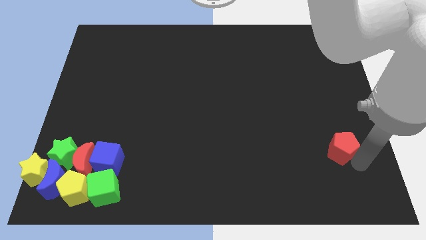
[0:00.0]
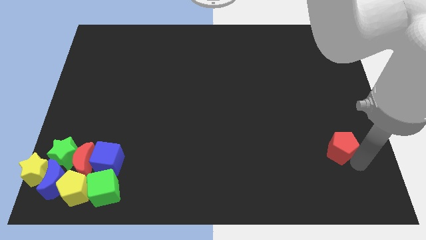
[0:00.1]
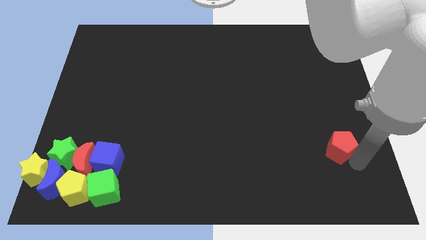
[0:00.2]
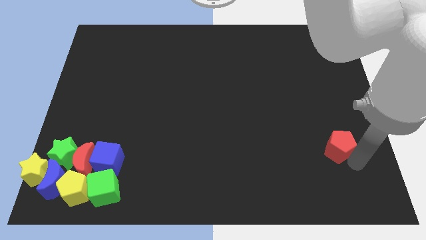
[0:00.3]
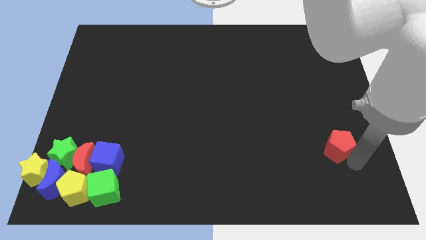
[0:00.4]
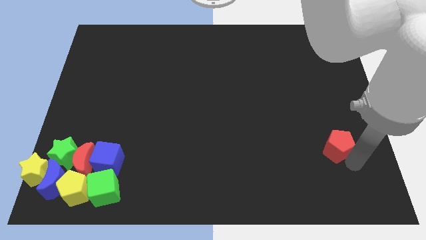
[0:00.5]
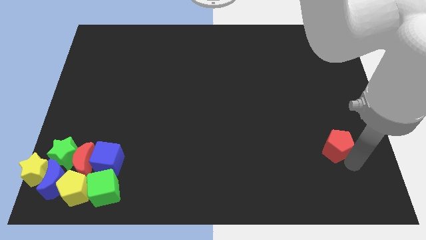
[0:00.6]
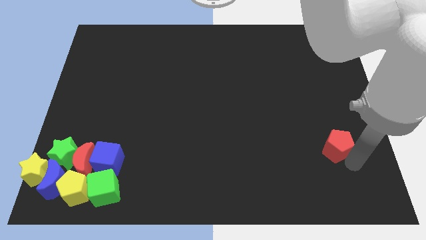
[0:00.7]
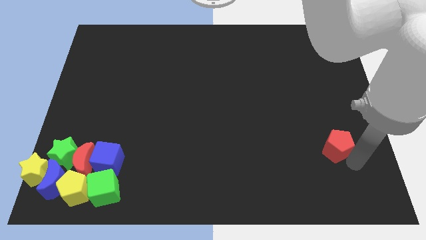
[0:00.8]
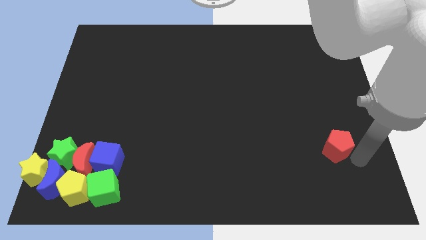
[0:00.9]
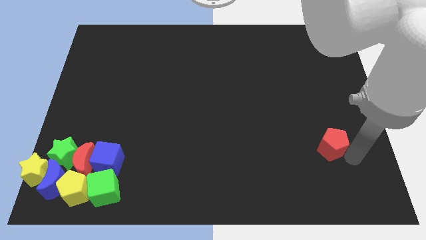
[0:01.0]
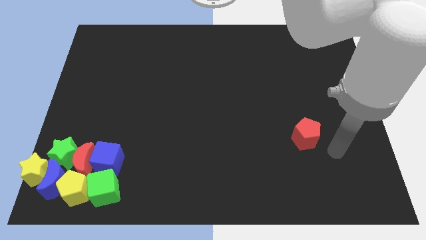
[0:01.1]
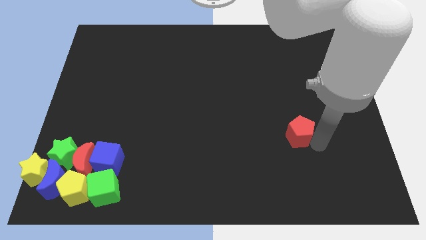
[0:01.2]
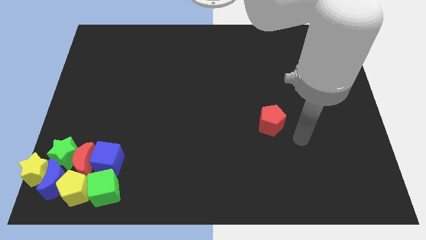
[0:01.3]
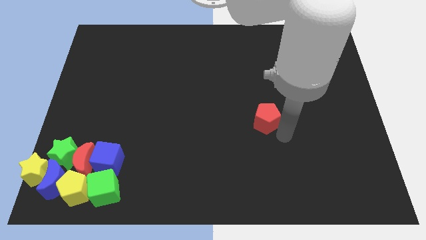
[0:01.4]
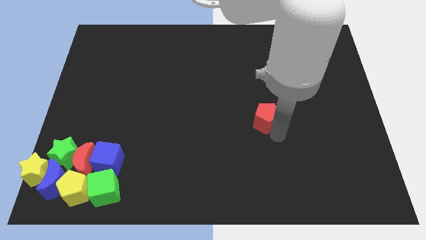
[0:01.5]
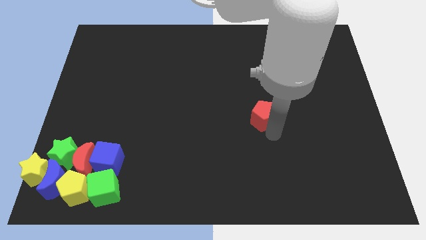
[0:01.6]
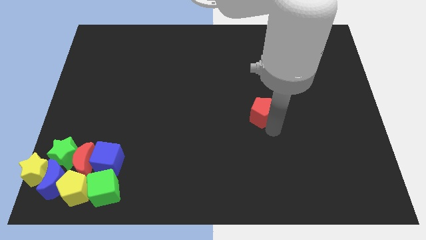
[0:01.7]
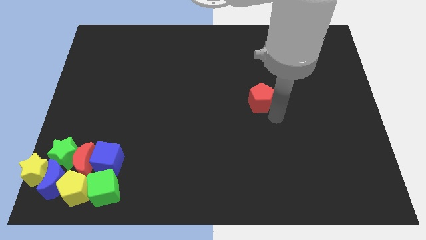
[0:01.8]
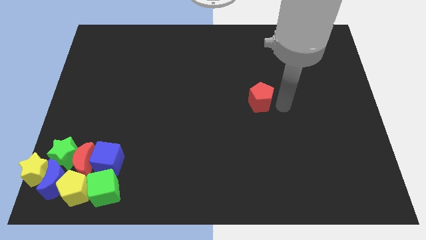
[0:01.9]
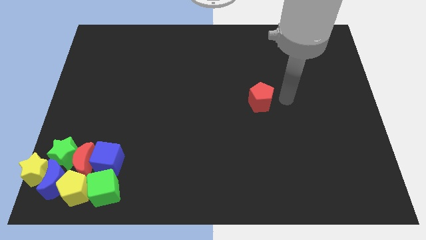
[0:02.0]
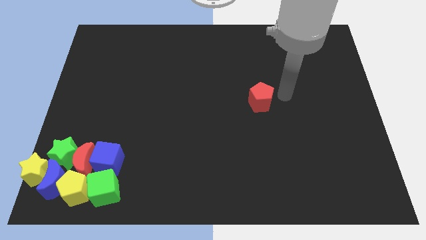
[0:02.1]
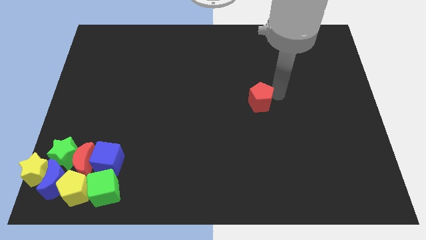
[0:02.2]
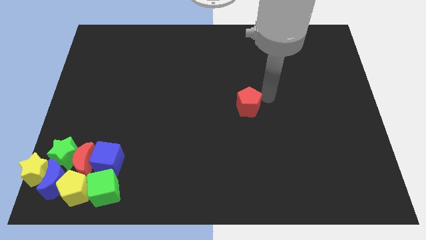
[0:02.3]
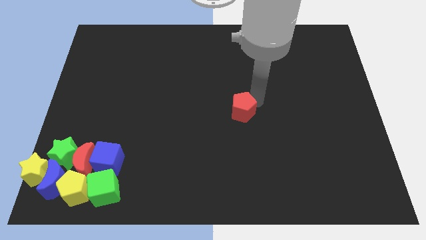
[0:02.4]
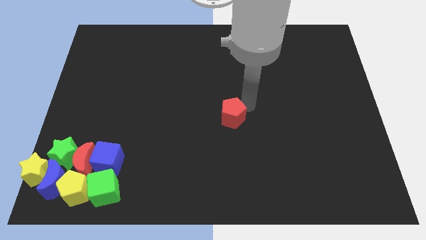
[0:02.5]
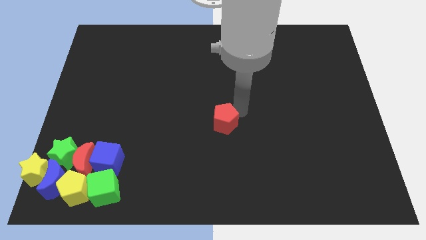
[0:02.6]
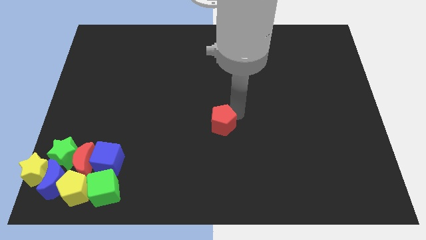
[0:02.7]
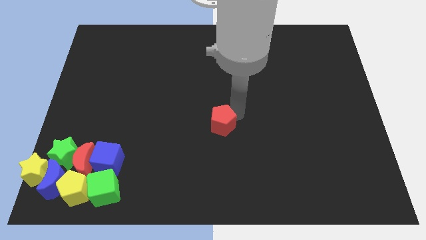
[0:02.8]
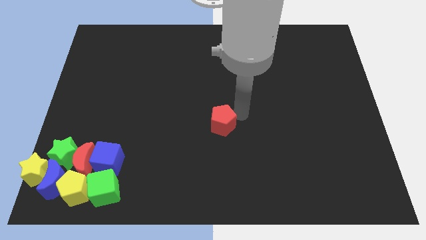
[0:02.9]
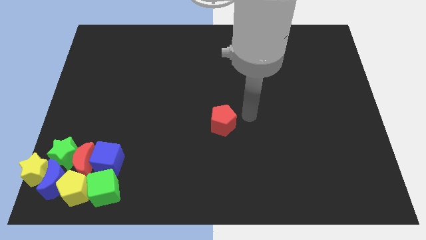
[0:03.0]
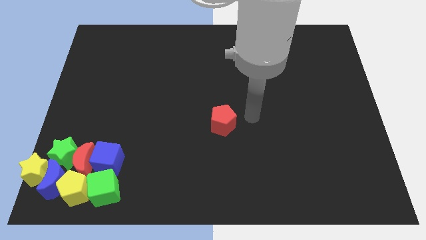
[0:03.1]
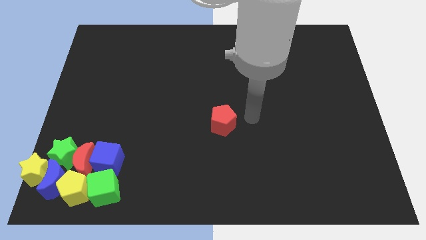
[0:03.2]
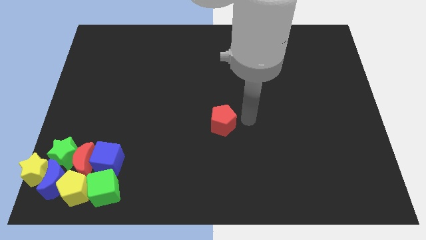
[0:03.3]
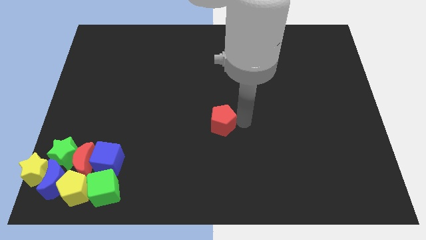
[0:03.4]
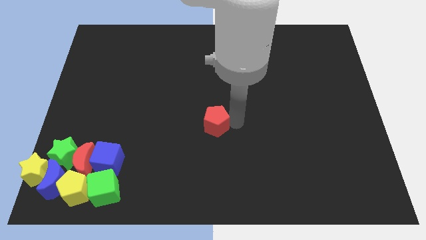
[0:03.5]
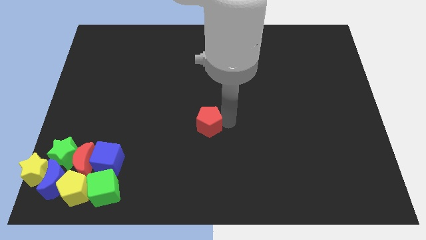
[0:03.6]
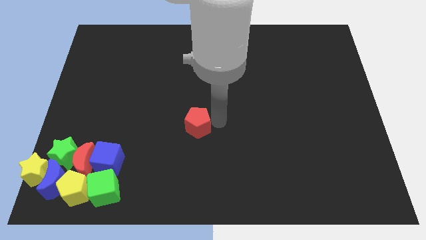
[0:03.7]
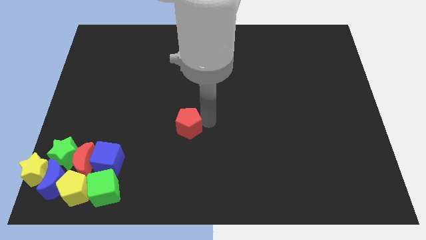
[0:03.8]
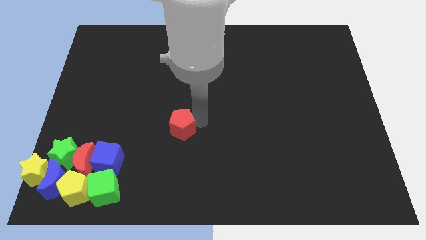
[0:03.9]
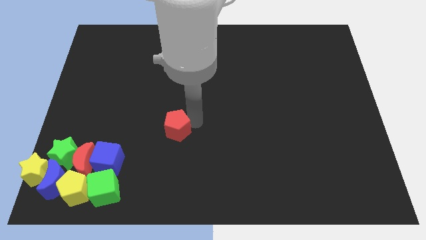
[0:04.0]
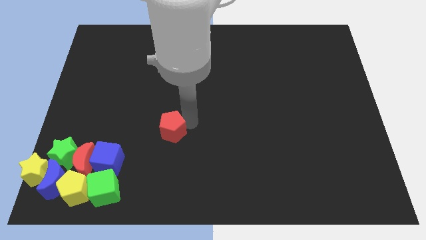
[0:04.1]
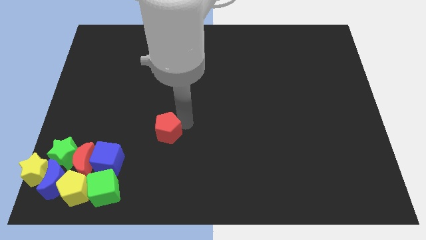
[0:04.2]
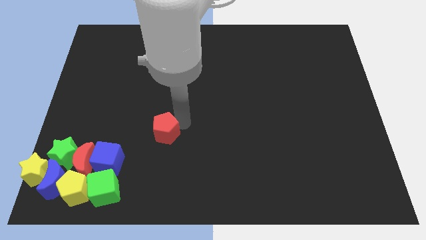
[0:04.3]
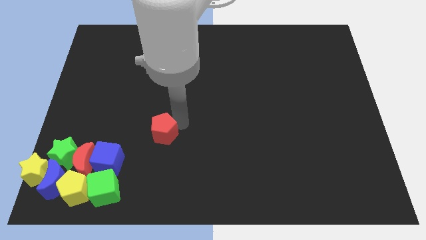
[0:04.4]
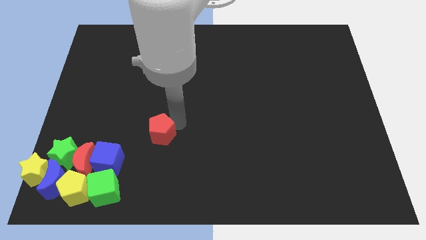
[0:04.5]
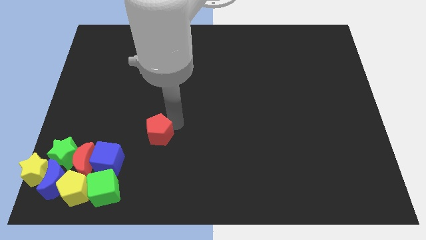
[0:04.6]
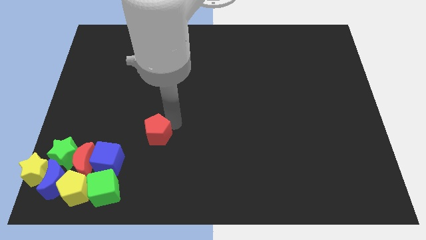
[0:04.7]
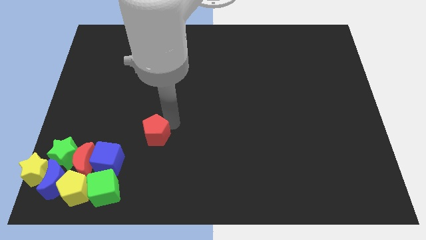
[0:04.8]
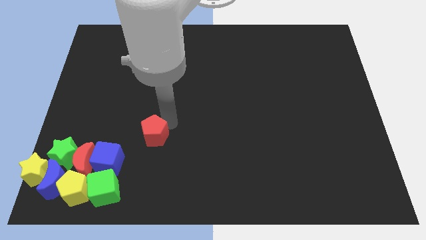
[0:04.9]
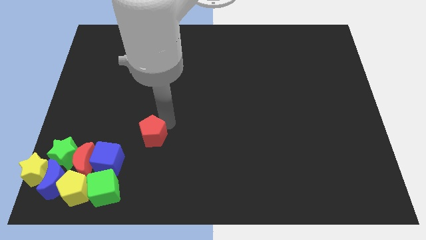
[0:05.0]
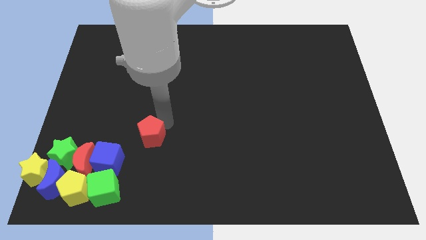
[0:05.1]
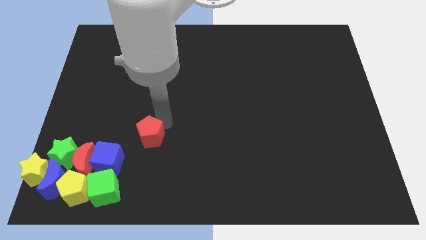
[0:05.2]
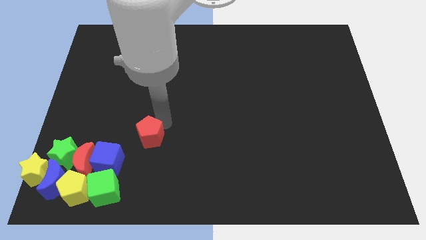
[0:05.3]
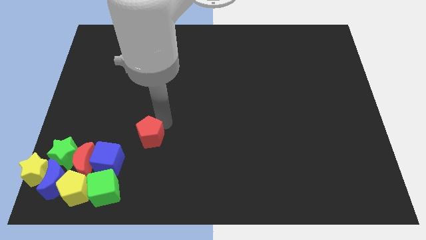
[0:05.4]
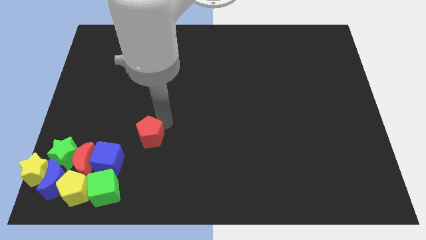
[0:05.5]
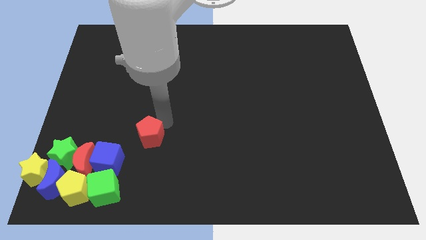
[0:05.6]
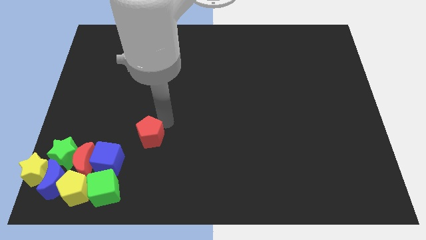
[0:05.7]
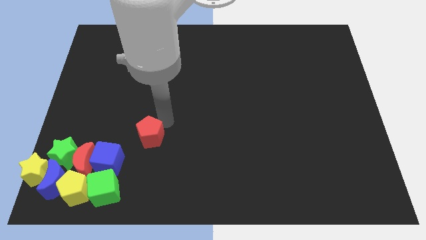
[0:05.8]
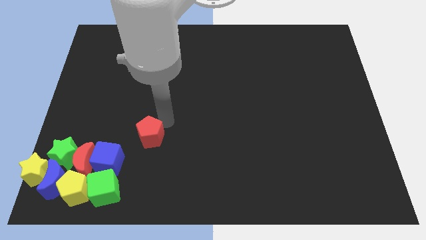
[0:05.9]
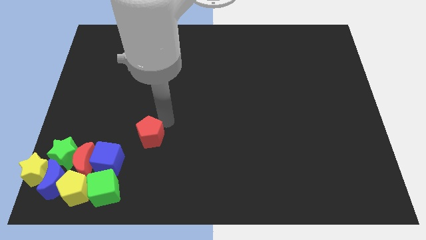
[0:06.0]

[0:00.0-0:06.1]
move the red pentagon towards the green star

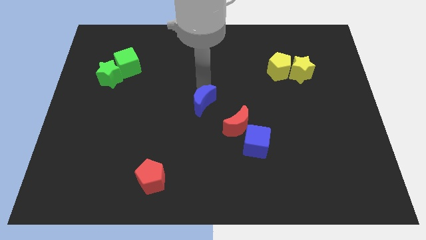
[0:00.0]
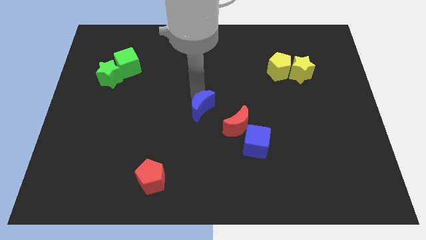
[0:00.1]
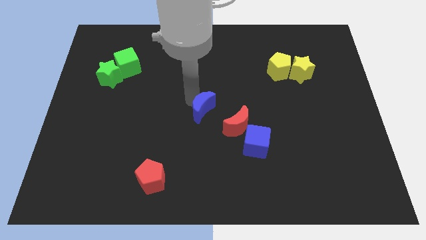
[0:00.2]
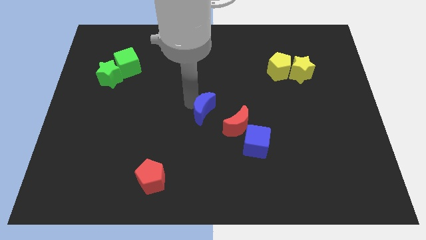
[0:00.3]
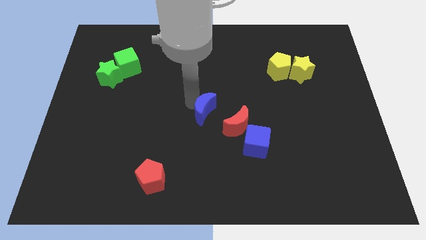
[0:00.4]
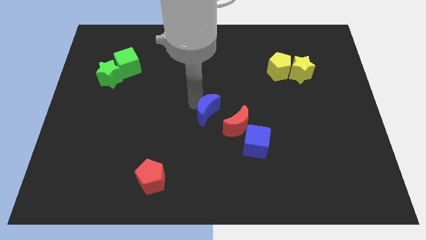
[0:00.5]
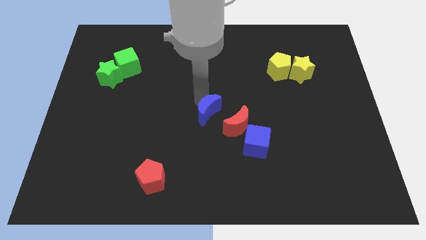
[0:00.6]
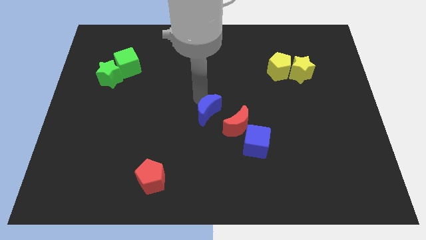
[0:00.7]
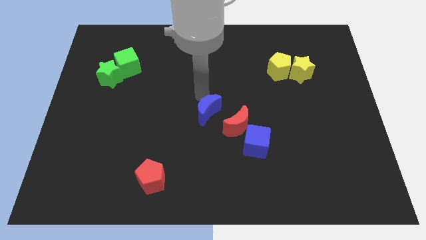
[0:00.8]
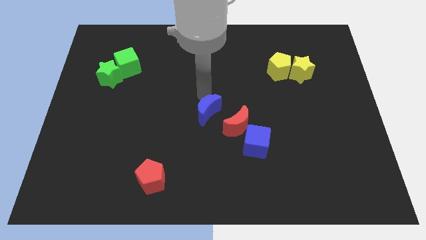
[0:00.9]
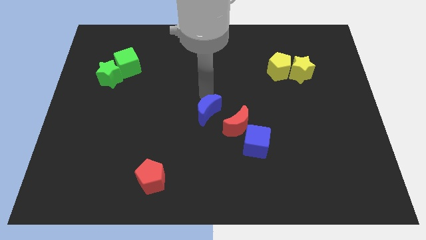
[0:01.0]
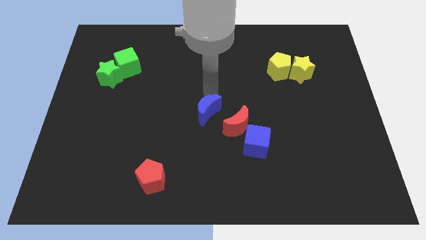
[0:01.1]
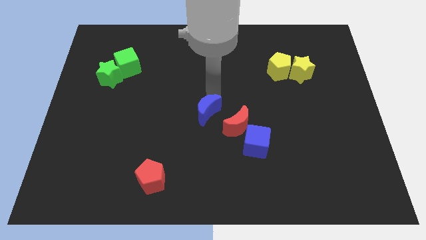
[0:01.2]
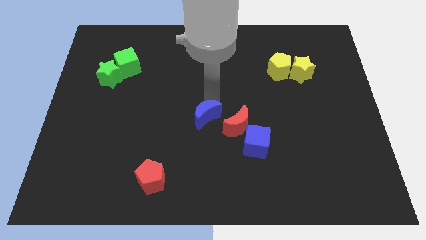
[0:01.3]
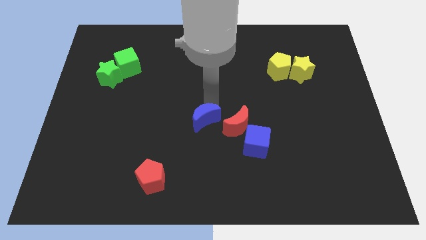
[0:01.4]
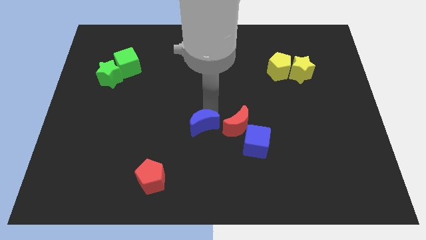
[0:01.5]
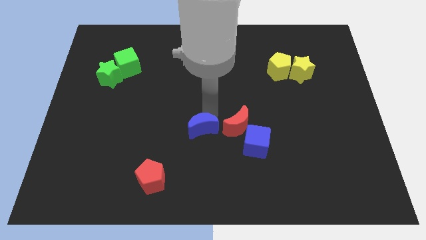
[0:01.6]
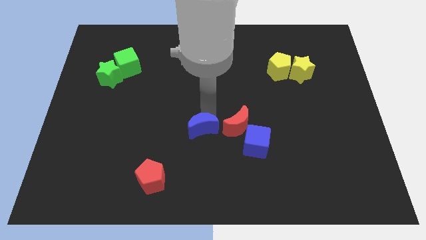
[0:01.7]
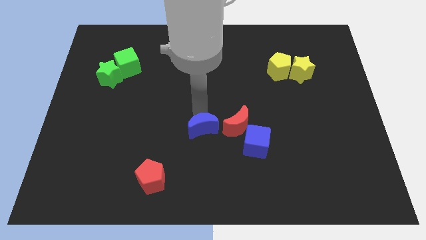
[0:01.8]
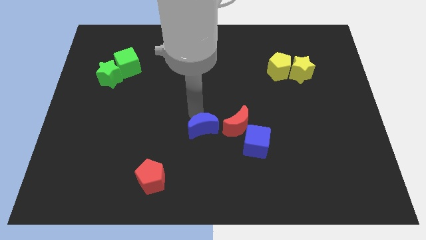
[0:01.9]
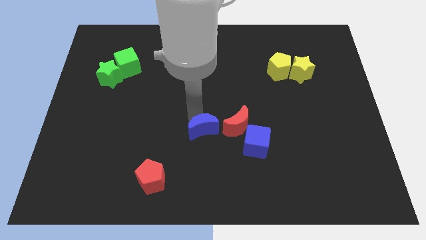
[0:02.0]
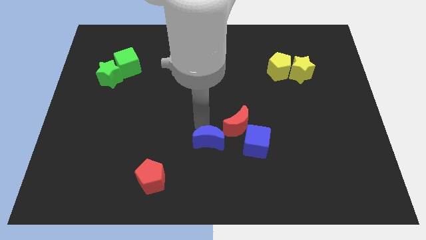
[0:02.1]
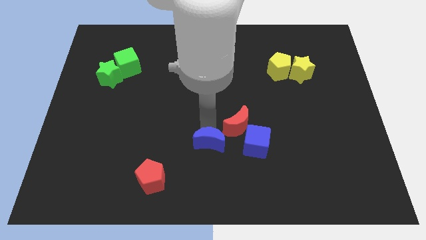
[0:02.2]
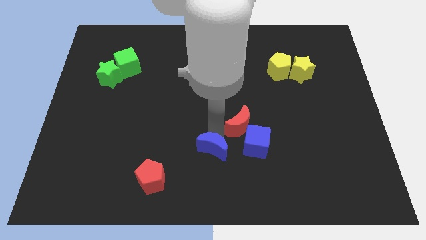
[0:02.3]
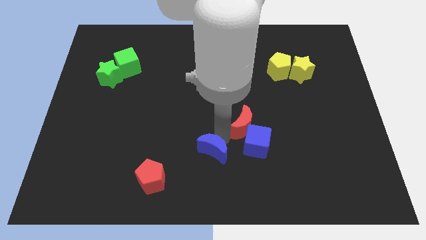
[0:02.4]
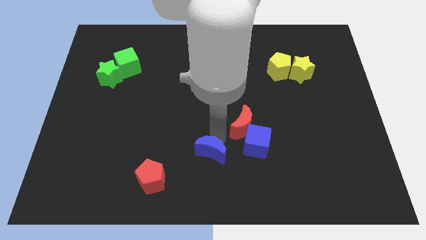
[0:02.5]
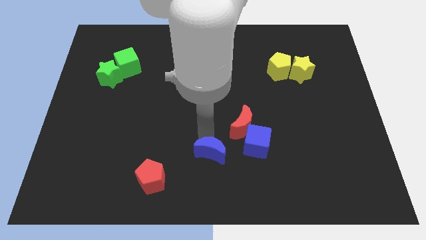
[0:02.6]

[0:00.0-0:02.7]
place blue moon towards the left of the blue cube

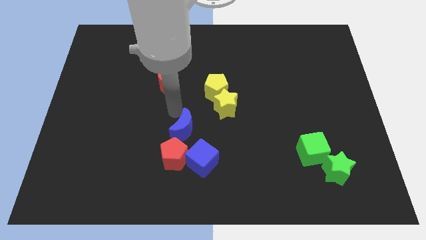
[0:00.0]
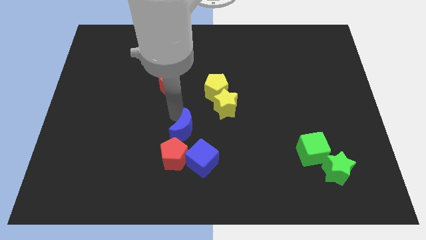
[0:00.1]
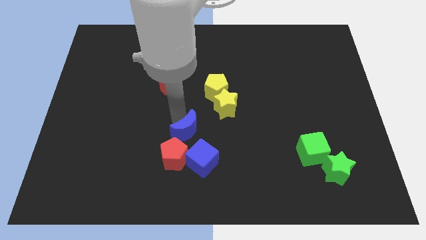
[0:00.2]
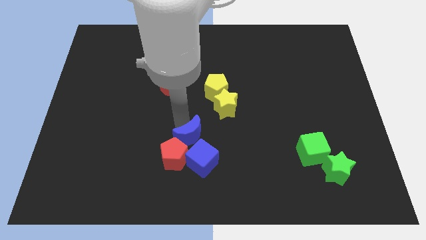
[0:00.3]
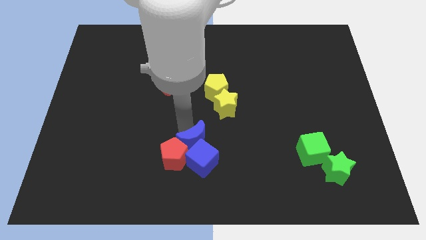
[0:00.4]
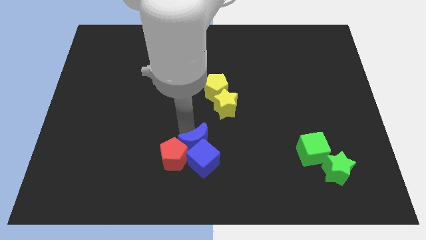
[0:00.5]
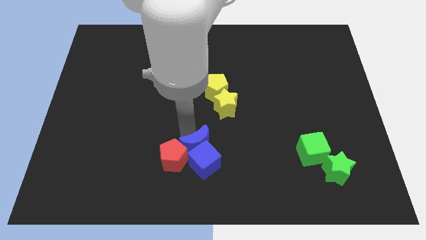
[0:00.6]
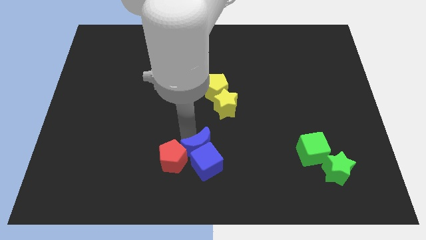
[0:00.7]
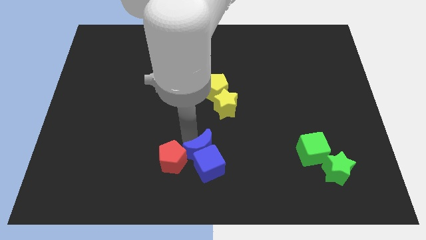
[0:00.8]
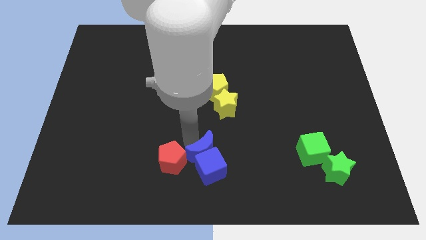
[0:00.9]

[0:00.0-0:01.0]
move the blue crescent into the blue cube
